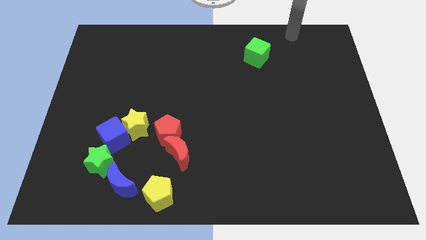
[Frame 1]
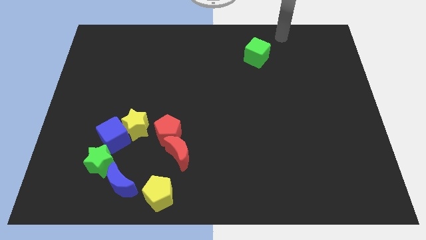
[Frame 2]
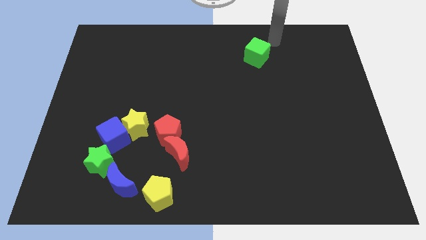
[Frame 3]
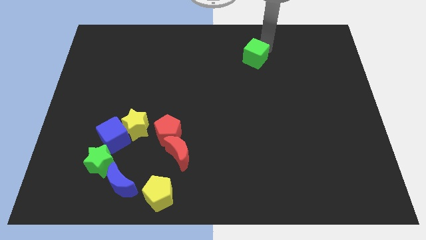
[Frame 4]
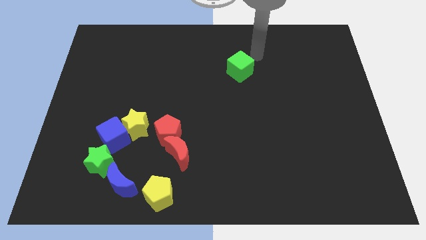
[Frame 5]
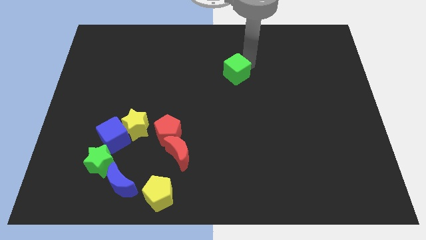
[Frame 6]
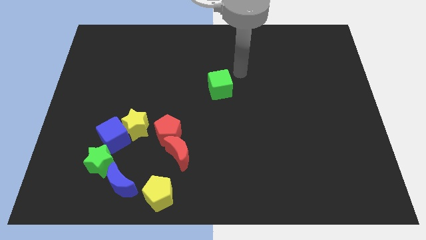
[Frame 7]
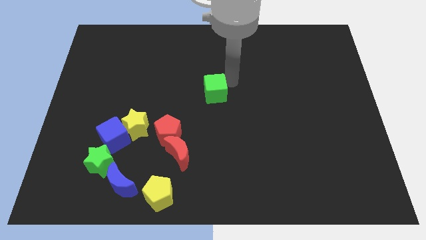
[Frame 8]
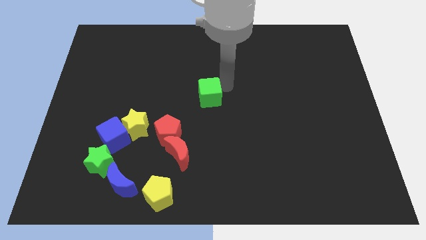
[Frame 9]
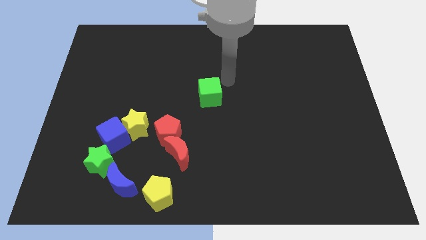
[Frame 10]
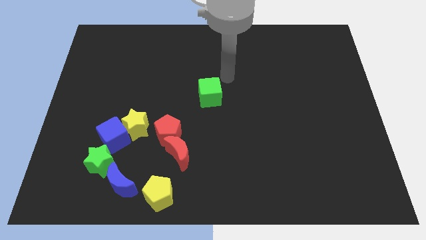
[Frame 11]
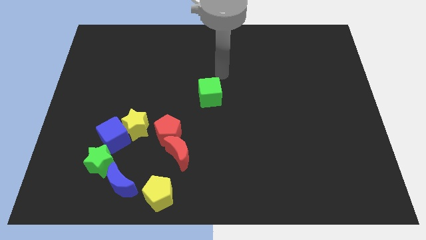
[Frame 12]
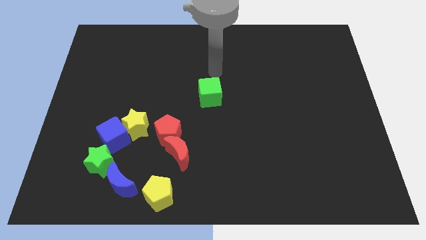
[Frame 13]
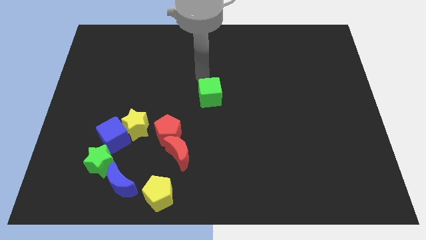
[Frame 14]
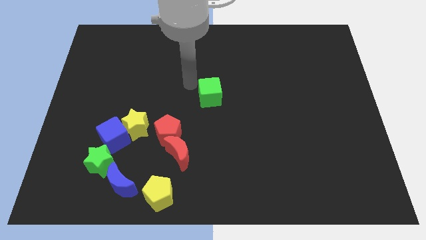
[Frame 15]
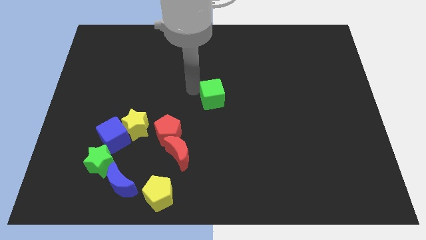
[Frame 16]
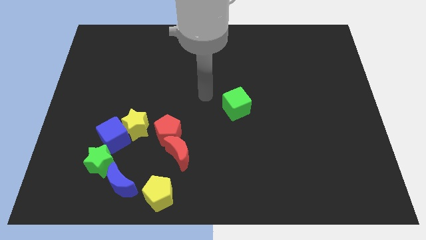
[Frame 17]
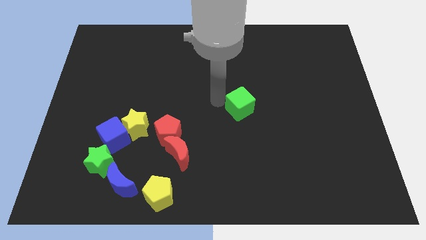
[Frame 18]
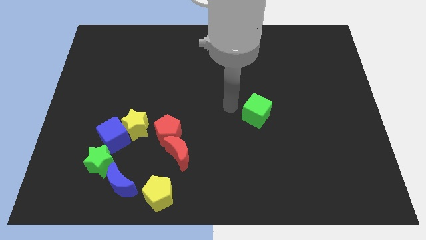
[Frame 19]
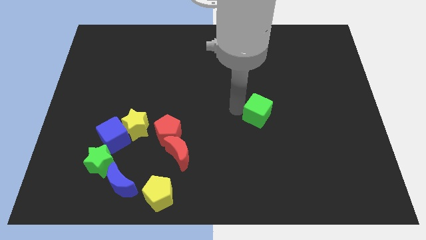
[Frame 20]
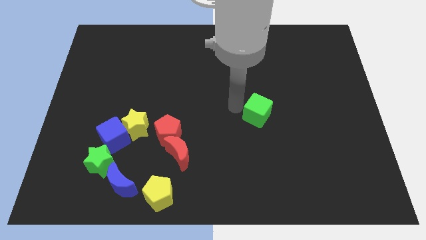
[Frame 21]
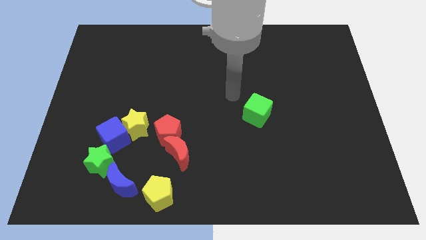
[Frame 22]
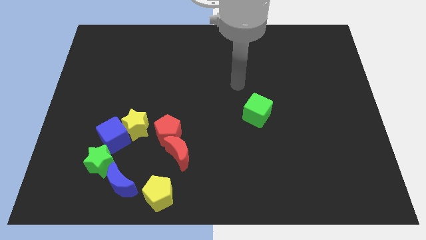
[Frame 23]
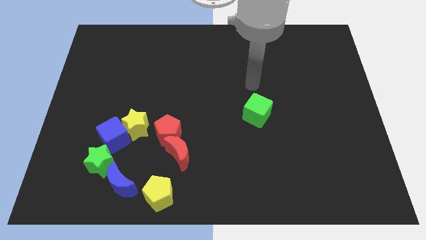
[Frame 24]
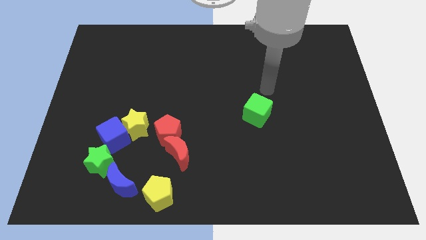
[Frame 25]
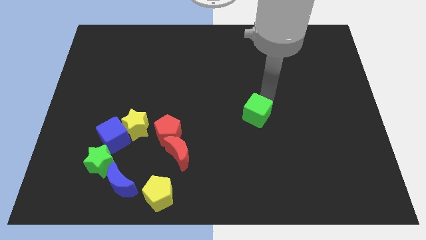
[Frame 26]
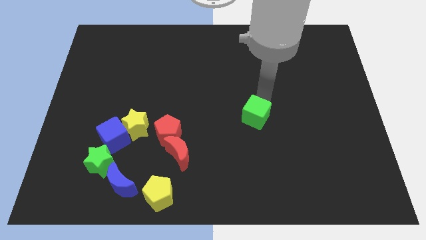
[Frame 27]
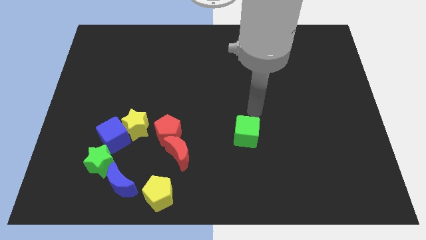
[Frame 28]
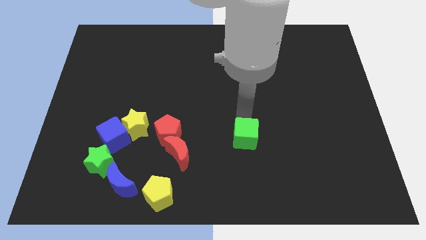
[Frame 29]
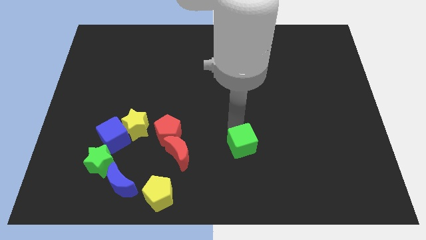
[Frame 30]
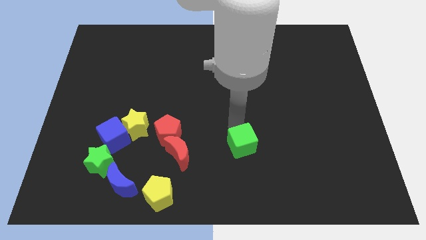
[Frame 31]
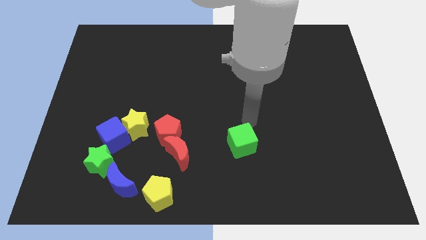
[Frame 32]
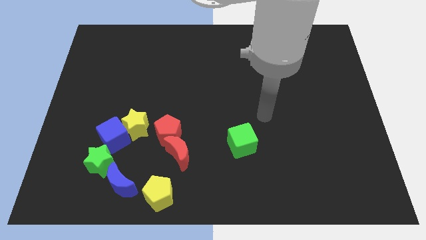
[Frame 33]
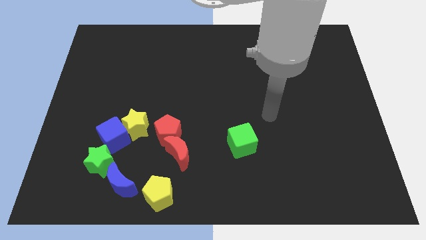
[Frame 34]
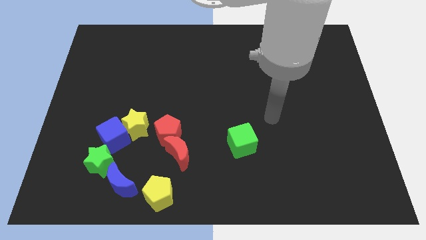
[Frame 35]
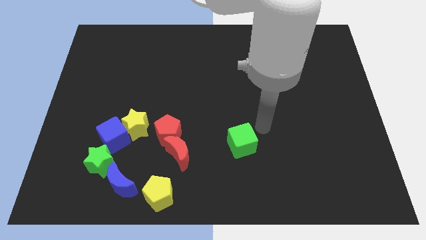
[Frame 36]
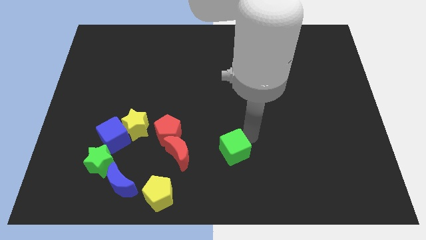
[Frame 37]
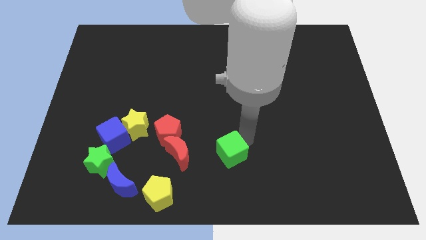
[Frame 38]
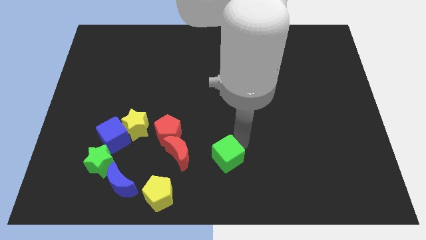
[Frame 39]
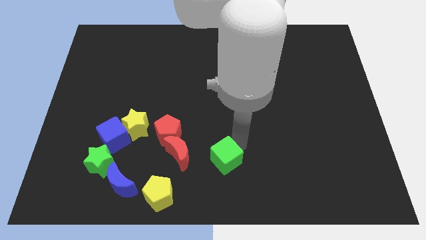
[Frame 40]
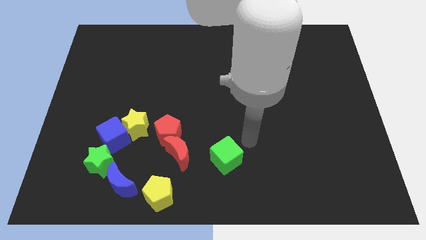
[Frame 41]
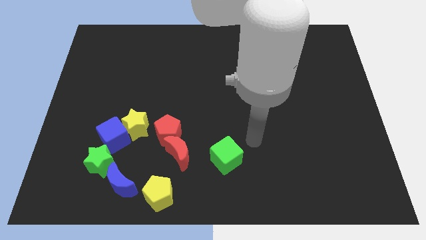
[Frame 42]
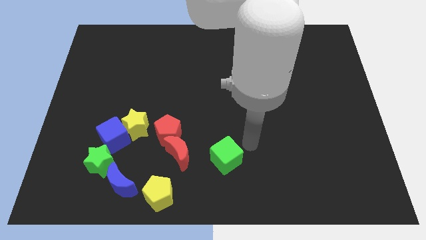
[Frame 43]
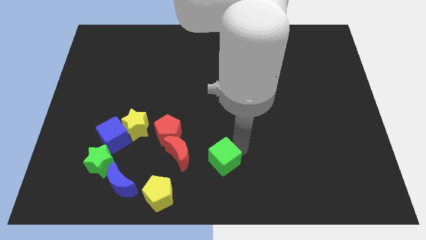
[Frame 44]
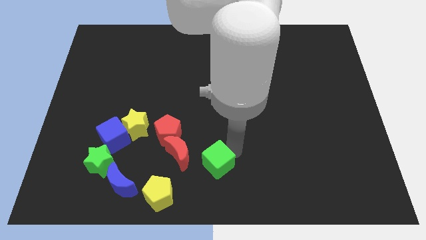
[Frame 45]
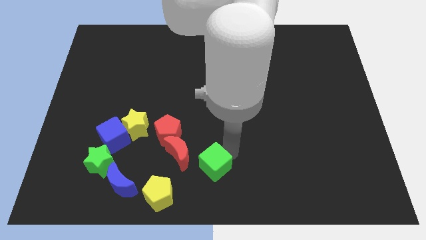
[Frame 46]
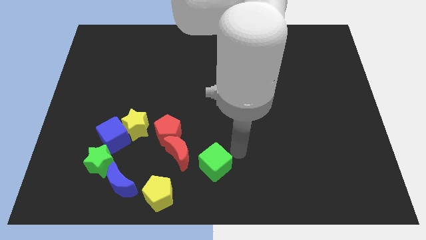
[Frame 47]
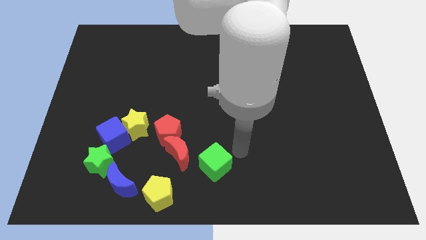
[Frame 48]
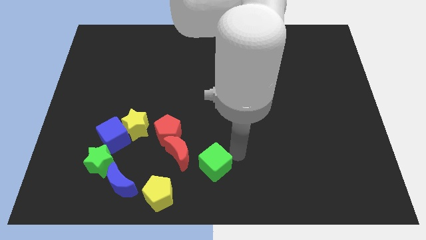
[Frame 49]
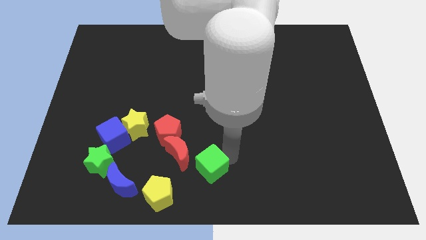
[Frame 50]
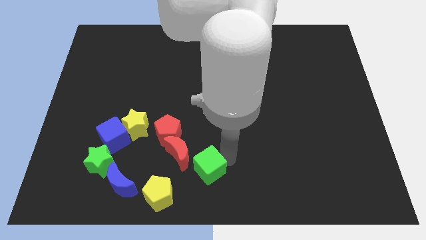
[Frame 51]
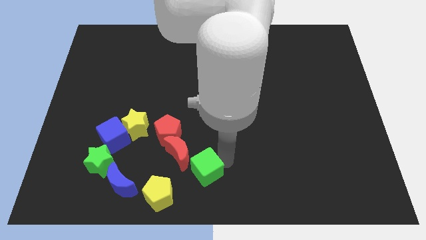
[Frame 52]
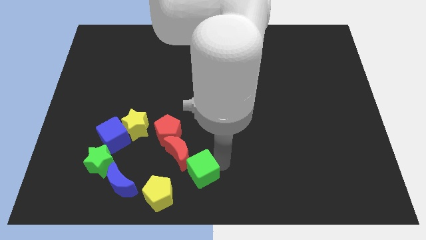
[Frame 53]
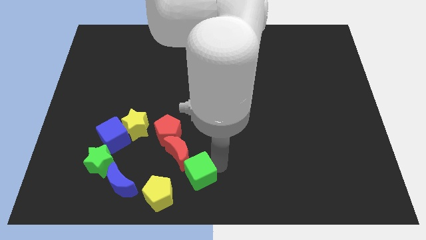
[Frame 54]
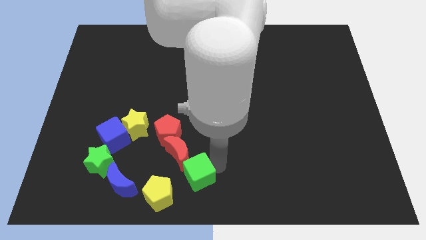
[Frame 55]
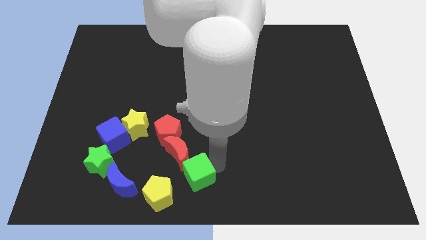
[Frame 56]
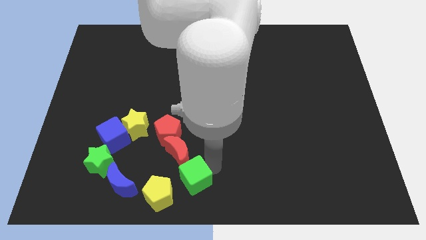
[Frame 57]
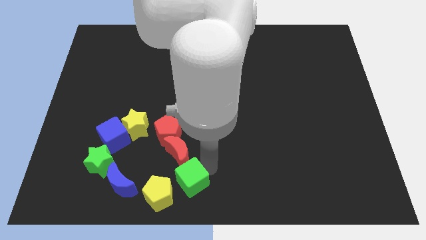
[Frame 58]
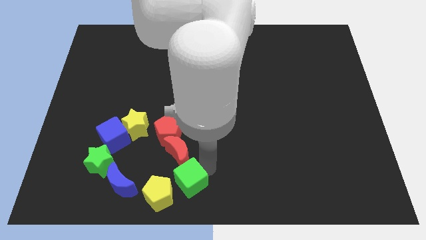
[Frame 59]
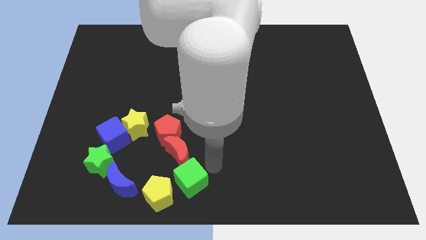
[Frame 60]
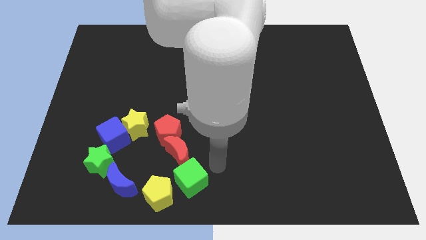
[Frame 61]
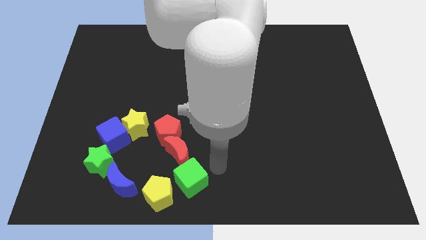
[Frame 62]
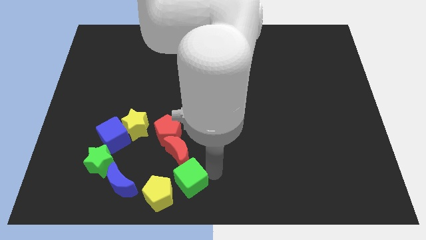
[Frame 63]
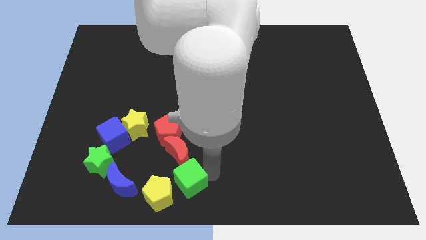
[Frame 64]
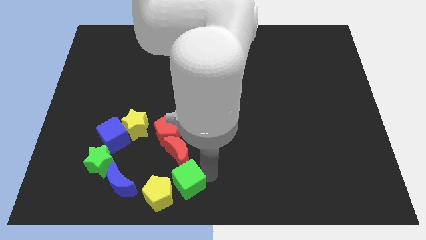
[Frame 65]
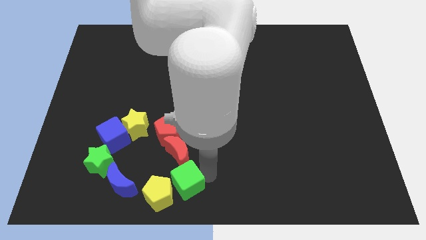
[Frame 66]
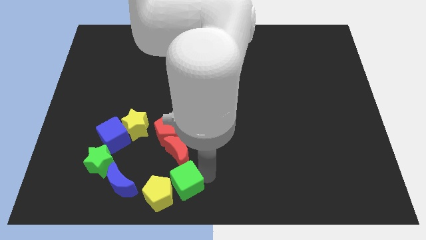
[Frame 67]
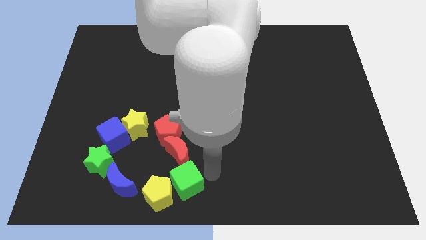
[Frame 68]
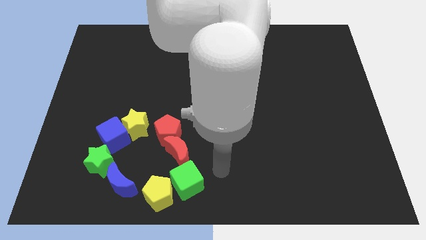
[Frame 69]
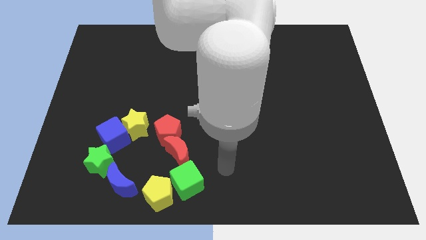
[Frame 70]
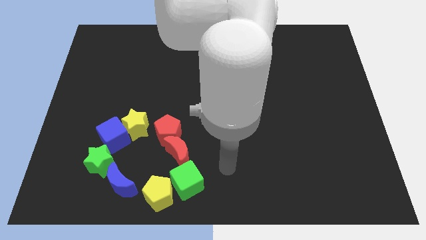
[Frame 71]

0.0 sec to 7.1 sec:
push the green cube to the bottom center of the board

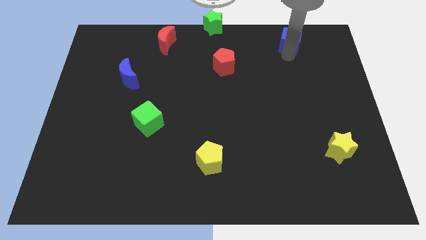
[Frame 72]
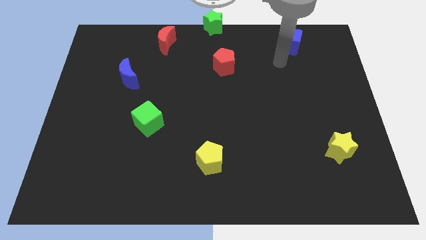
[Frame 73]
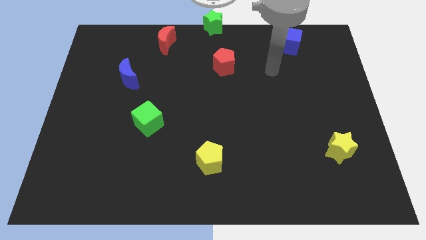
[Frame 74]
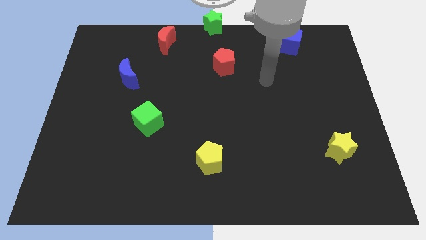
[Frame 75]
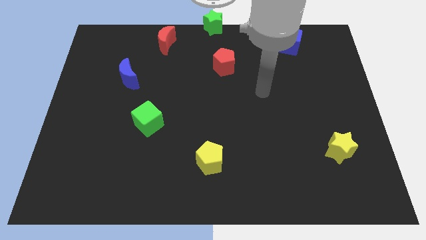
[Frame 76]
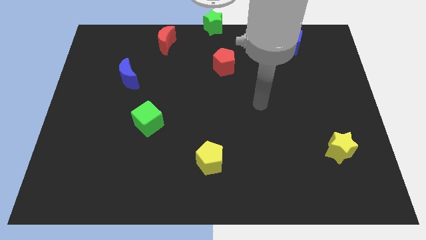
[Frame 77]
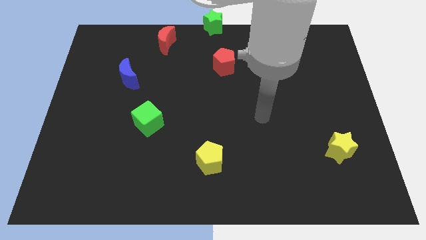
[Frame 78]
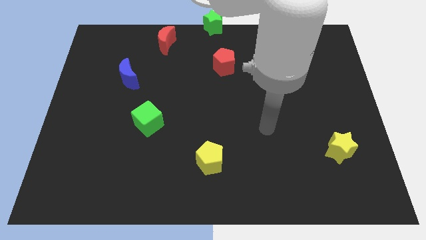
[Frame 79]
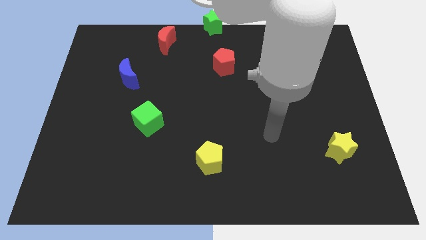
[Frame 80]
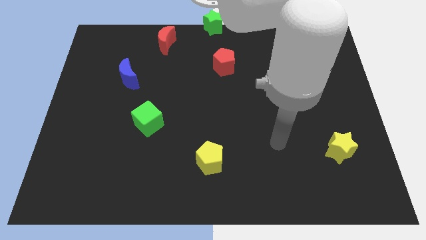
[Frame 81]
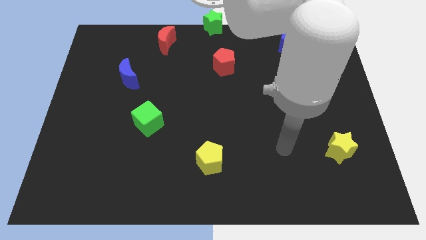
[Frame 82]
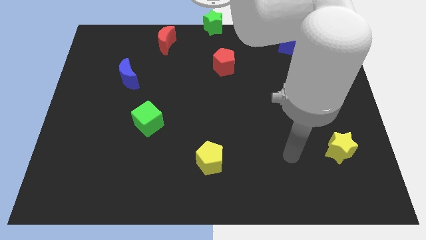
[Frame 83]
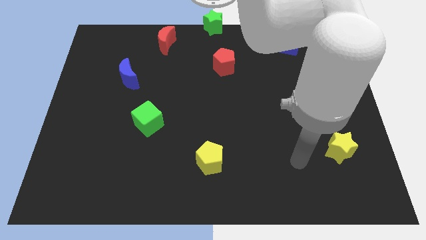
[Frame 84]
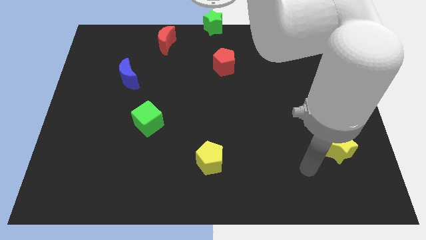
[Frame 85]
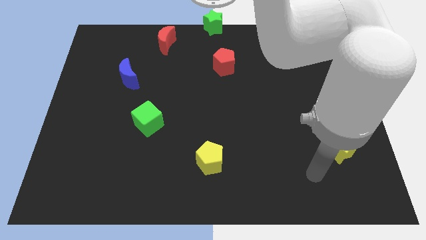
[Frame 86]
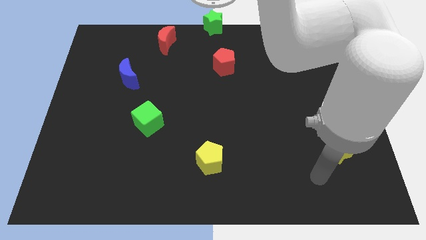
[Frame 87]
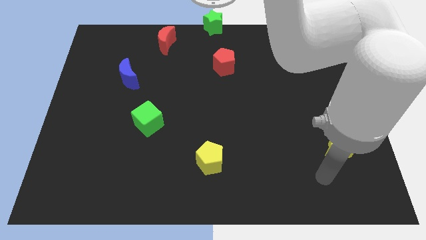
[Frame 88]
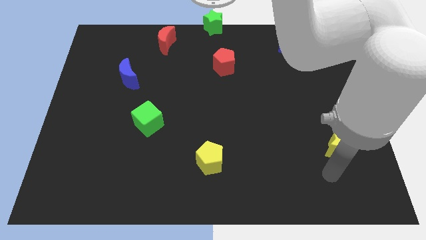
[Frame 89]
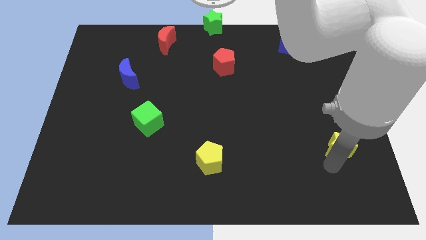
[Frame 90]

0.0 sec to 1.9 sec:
place your hand vertically below the yellow star

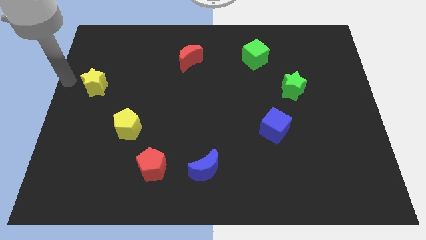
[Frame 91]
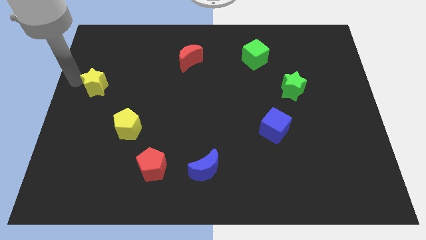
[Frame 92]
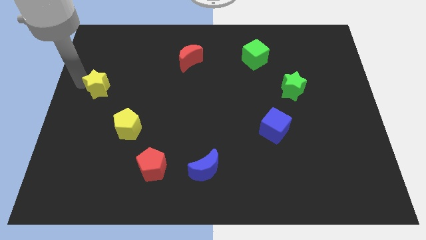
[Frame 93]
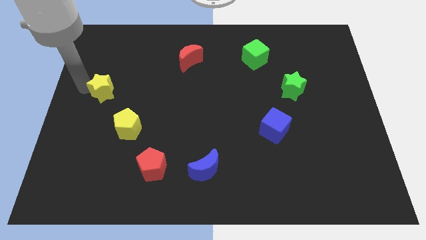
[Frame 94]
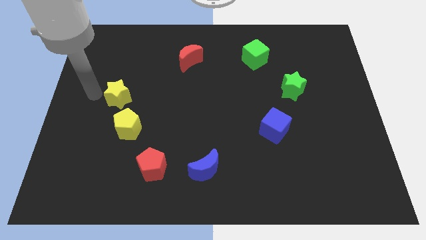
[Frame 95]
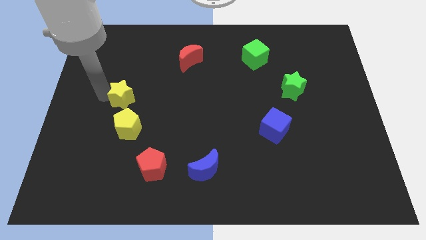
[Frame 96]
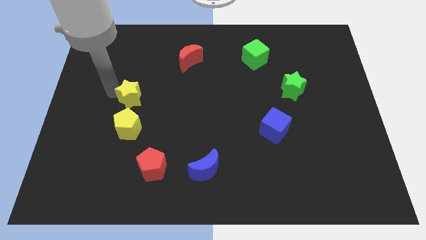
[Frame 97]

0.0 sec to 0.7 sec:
place the yellow star above the yellow pentagon
